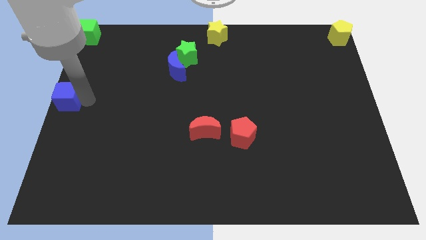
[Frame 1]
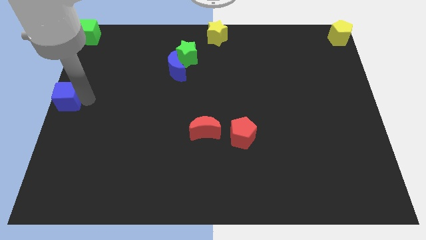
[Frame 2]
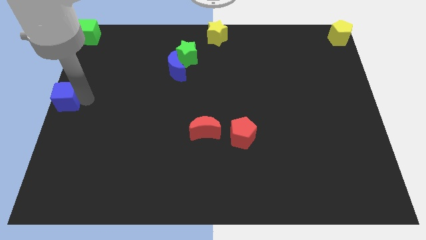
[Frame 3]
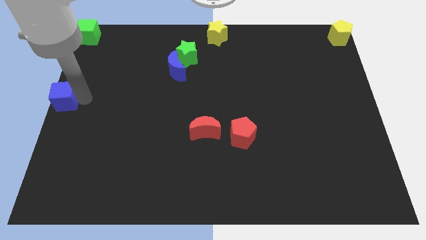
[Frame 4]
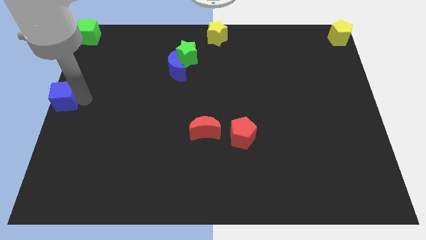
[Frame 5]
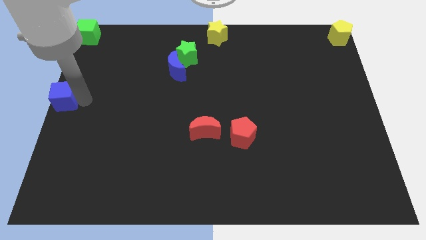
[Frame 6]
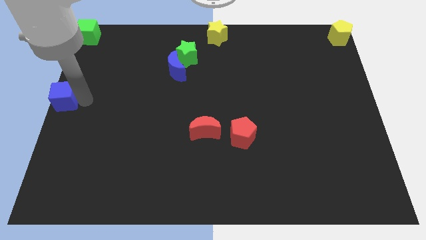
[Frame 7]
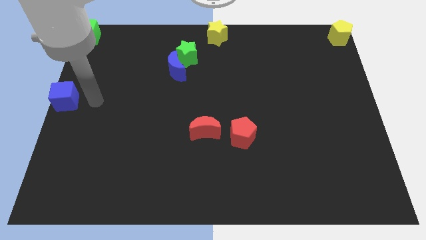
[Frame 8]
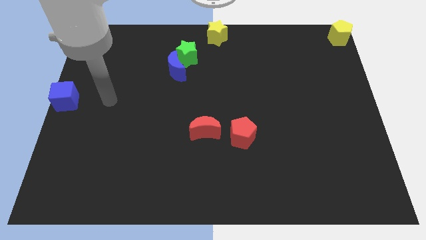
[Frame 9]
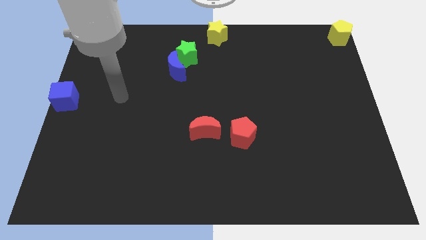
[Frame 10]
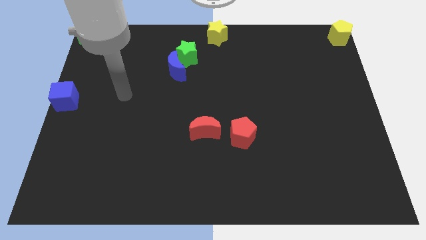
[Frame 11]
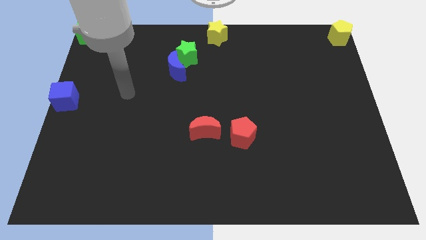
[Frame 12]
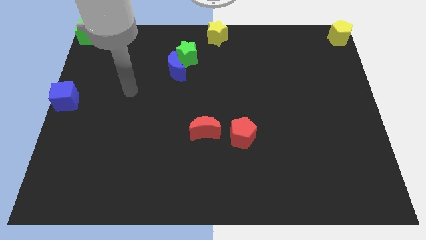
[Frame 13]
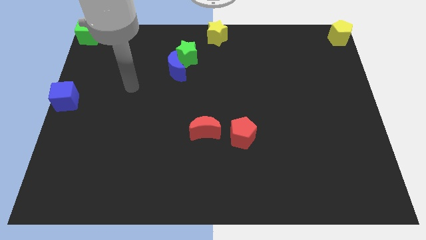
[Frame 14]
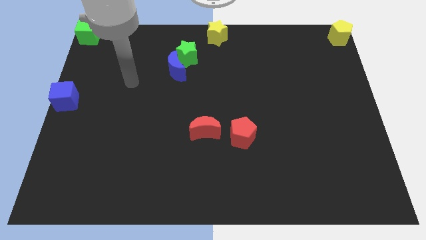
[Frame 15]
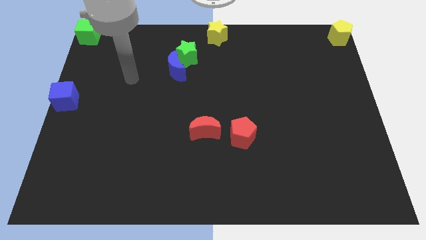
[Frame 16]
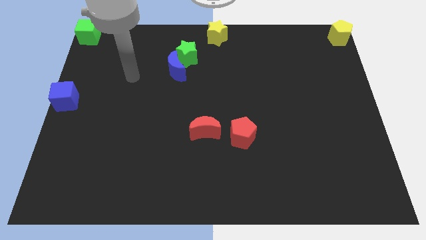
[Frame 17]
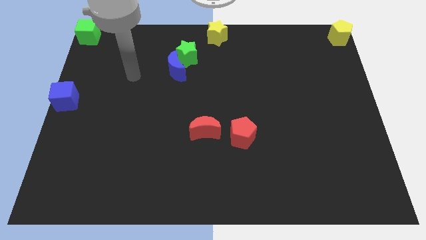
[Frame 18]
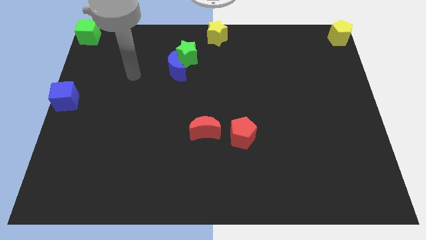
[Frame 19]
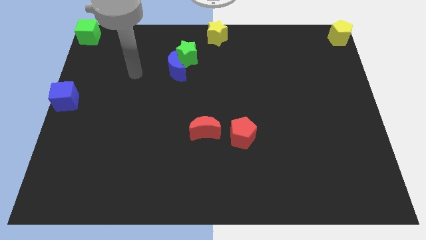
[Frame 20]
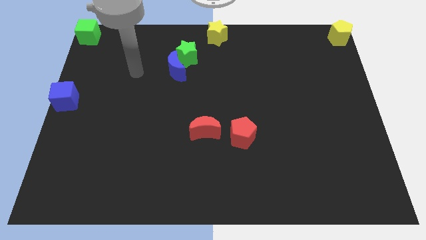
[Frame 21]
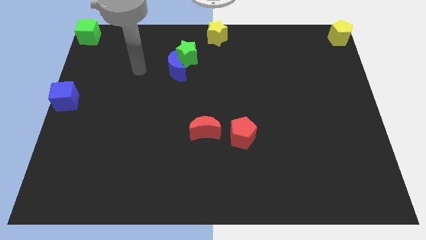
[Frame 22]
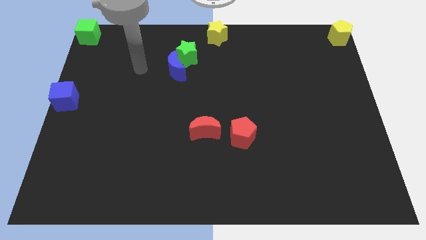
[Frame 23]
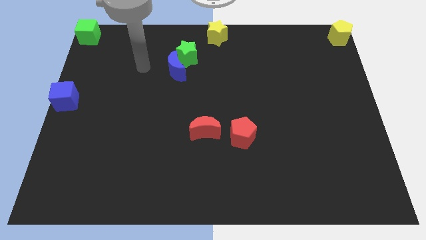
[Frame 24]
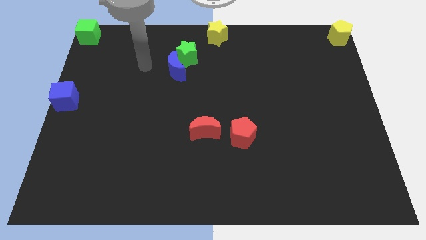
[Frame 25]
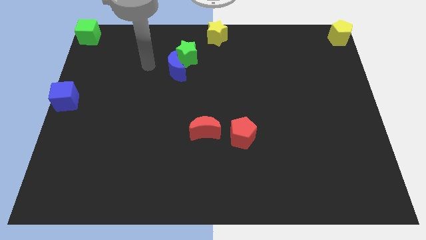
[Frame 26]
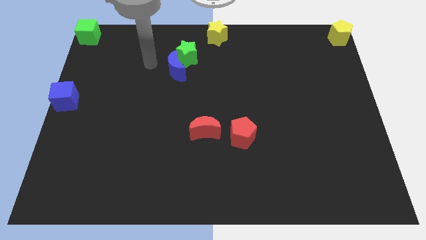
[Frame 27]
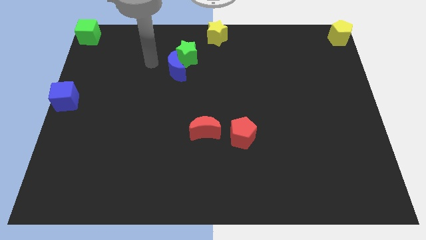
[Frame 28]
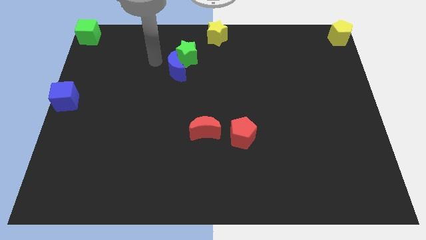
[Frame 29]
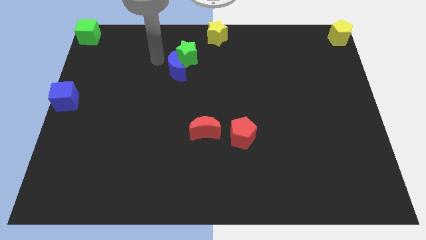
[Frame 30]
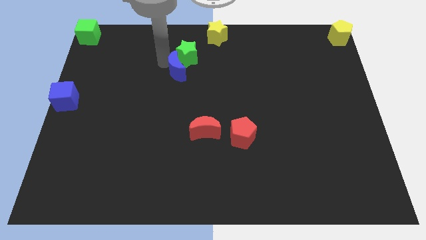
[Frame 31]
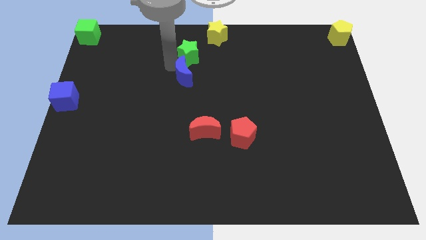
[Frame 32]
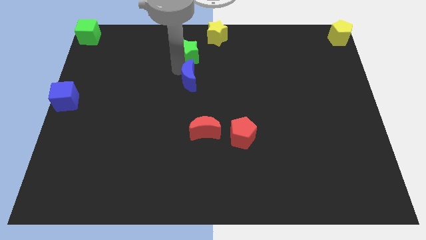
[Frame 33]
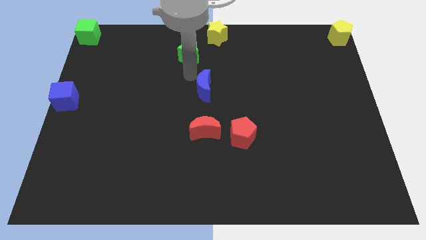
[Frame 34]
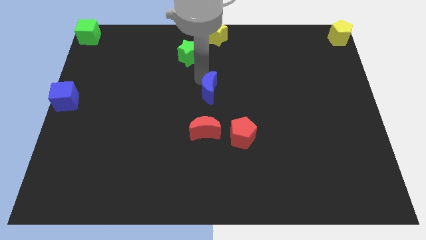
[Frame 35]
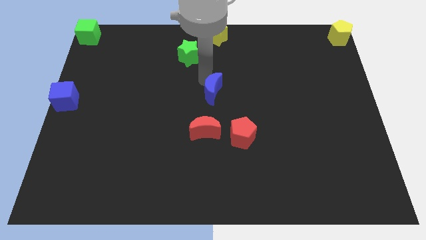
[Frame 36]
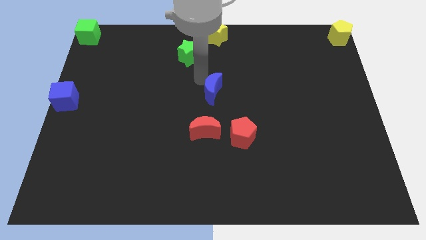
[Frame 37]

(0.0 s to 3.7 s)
go near blue moon

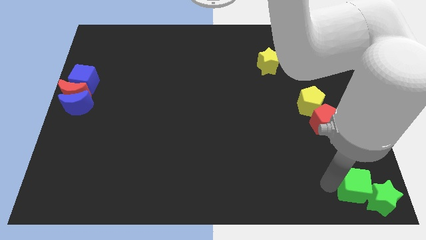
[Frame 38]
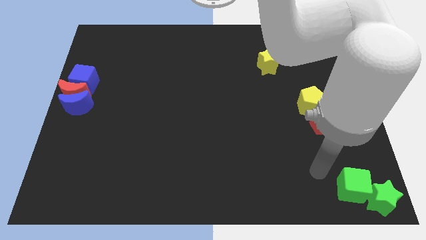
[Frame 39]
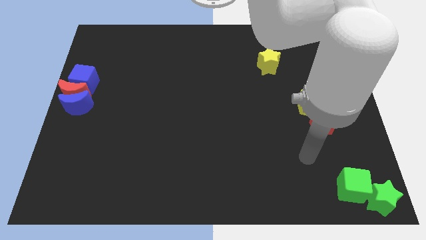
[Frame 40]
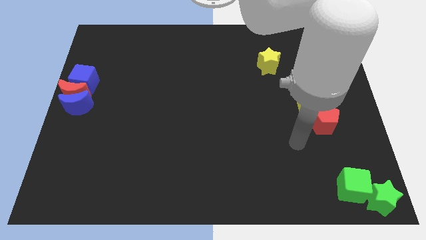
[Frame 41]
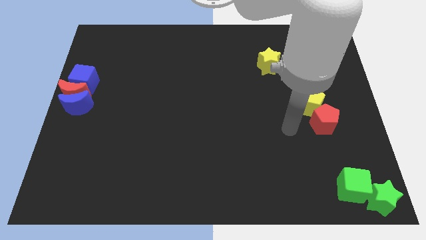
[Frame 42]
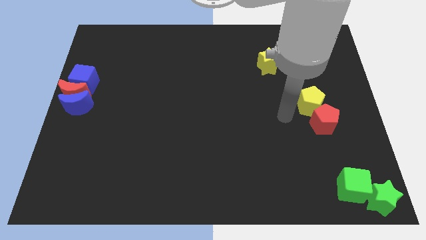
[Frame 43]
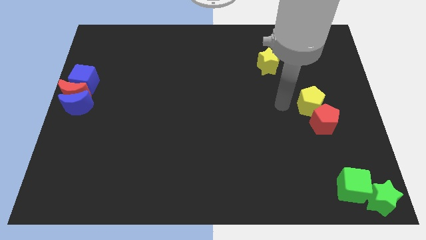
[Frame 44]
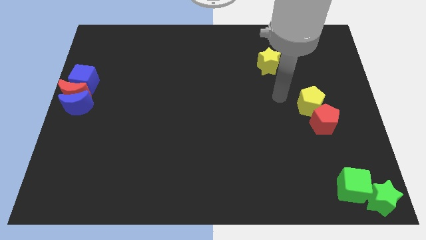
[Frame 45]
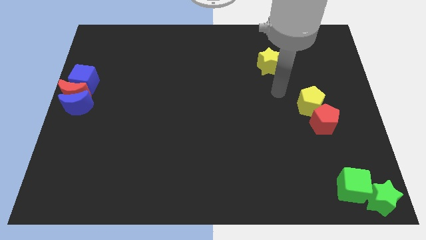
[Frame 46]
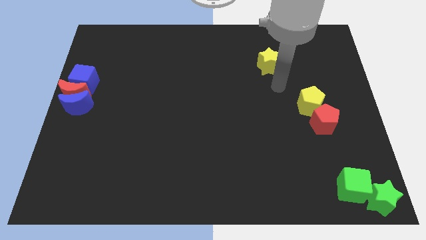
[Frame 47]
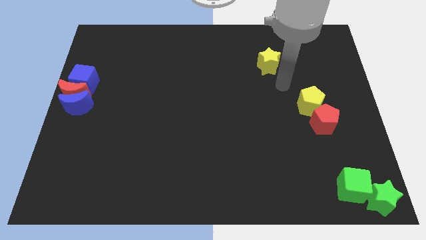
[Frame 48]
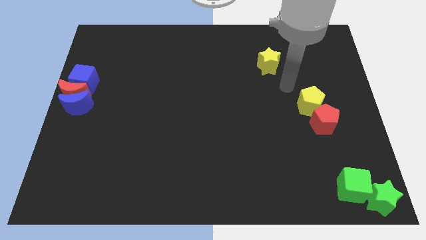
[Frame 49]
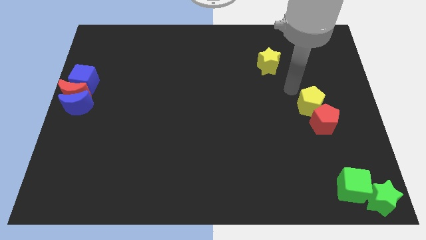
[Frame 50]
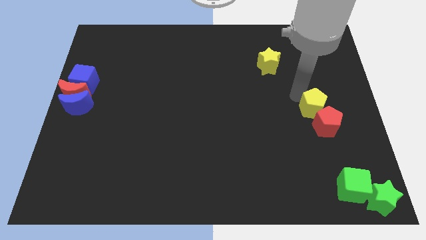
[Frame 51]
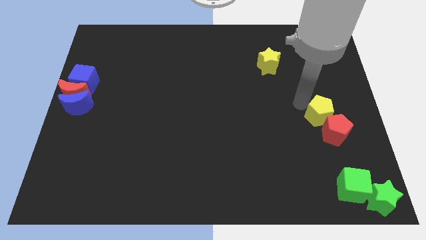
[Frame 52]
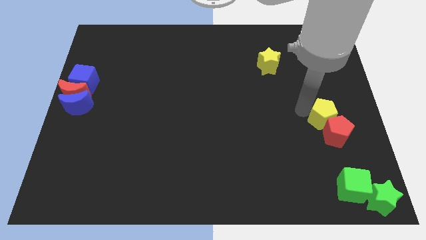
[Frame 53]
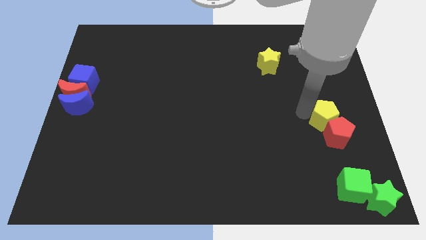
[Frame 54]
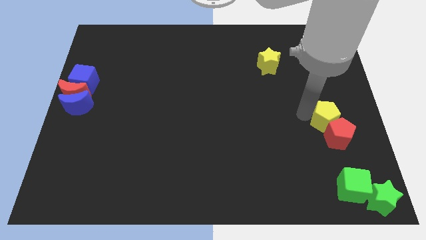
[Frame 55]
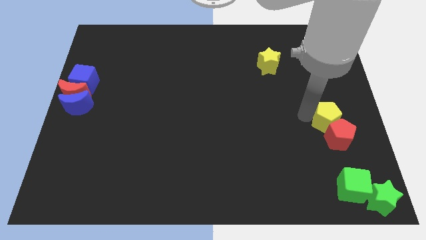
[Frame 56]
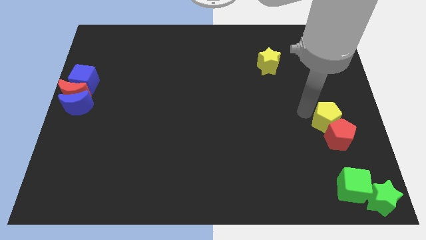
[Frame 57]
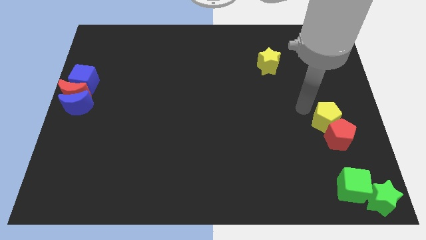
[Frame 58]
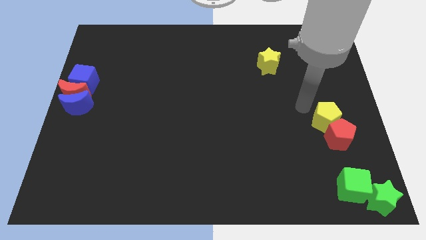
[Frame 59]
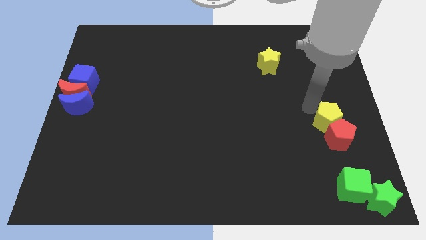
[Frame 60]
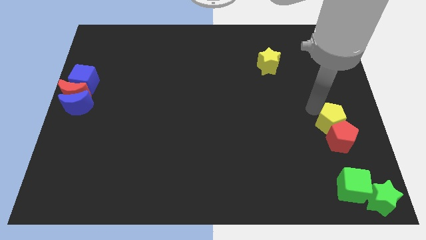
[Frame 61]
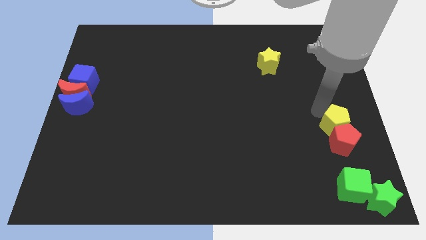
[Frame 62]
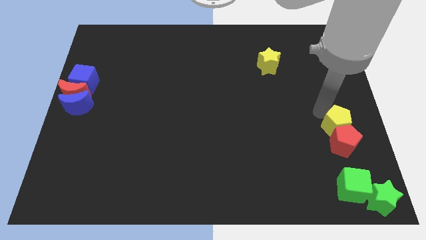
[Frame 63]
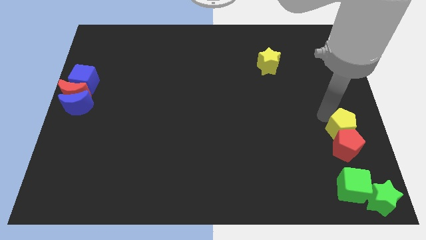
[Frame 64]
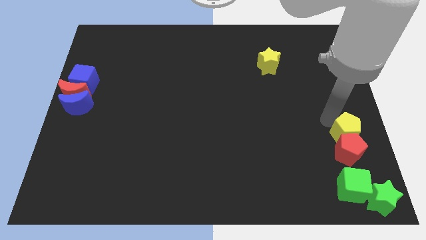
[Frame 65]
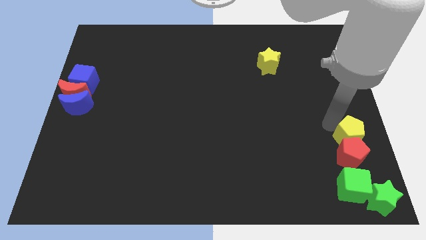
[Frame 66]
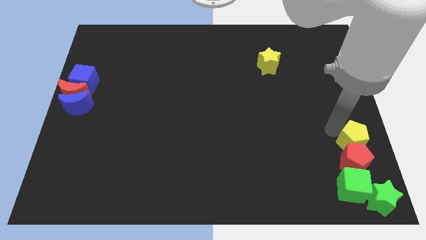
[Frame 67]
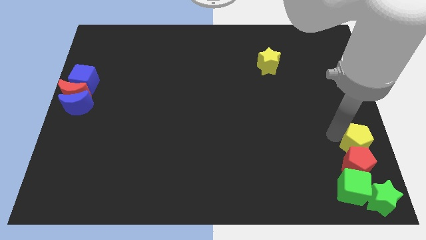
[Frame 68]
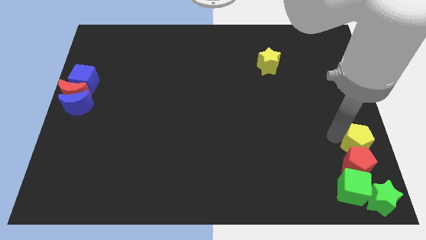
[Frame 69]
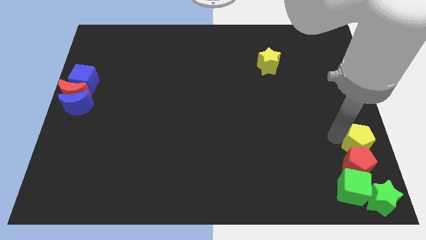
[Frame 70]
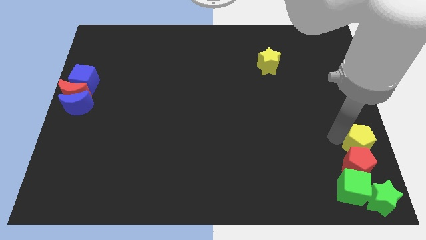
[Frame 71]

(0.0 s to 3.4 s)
slide red and the yellow pentagon above the green cube

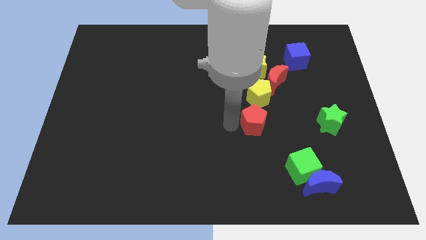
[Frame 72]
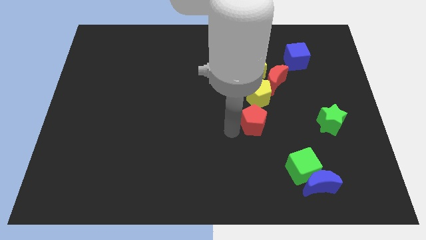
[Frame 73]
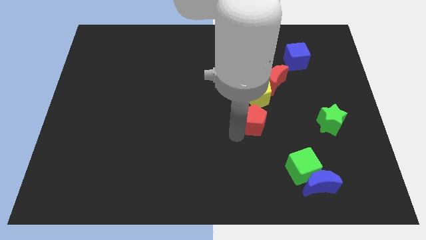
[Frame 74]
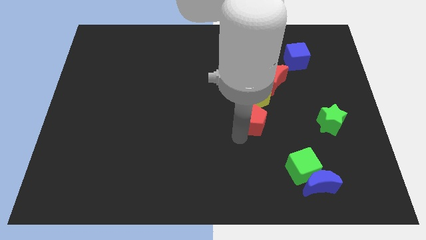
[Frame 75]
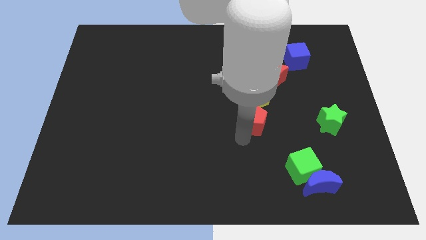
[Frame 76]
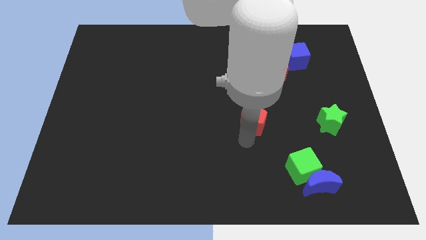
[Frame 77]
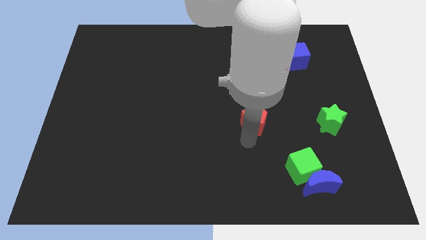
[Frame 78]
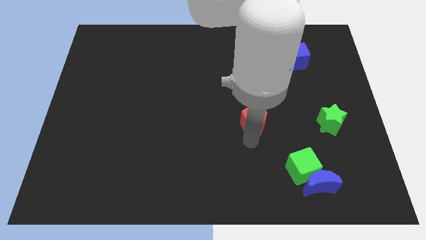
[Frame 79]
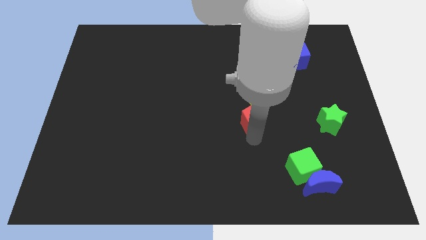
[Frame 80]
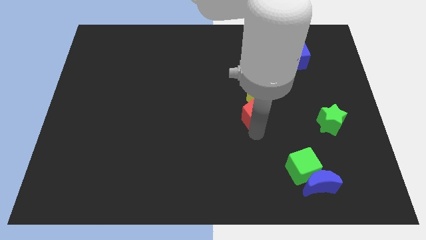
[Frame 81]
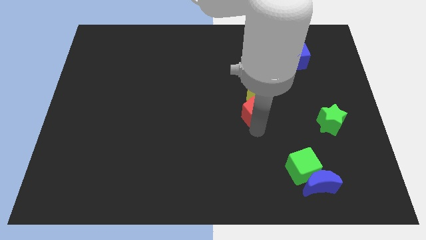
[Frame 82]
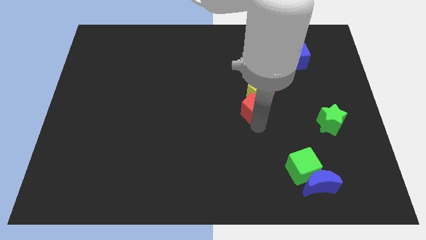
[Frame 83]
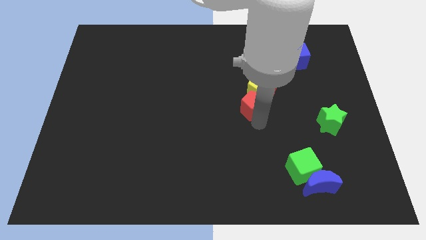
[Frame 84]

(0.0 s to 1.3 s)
push the red pentagon below the yellow pentagon

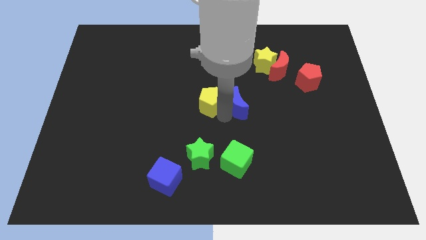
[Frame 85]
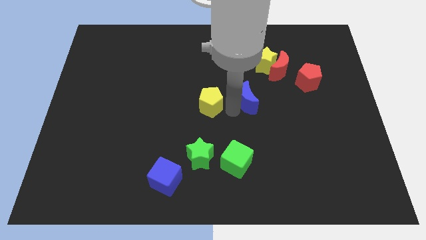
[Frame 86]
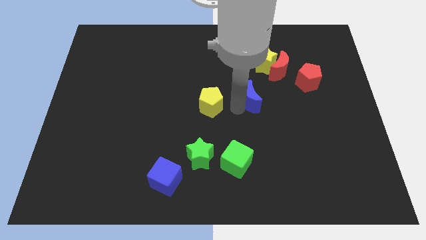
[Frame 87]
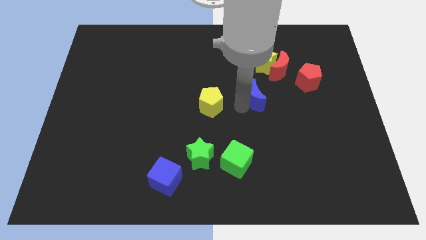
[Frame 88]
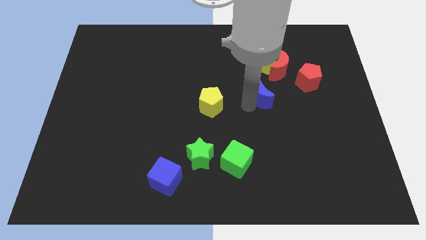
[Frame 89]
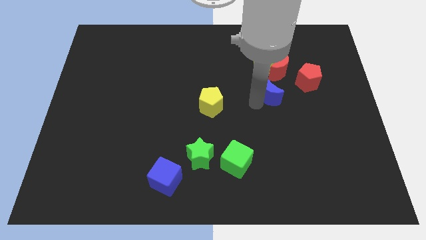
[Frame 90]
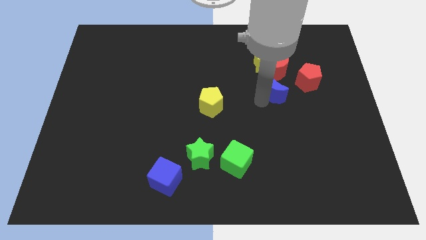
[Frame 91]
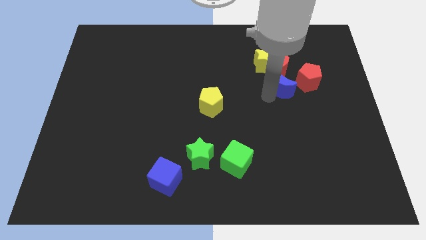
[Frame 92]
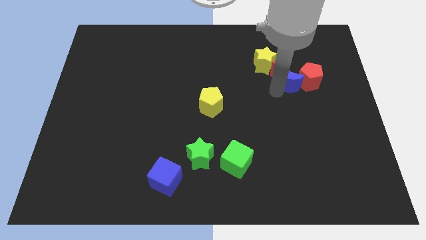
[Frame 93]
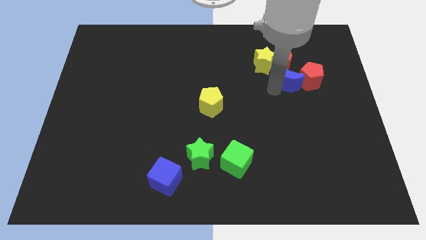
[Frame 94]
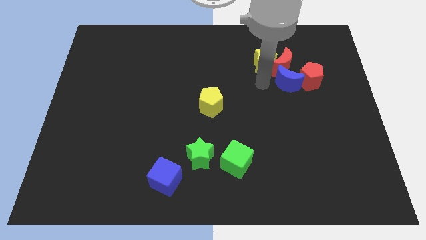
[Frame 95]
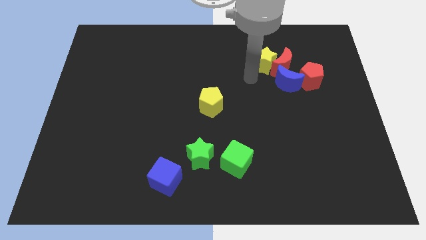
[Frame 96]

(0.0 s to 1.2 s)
move blue moon into the red blocks
